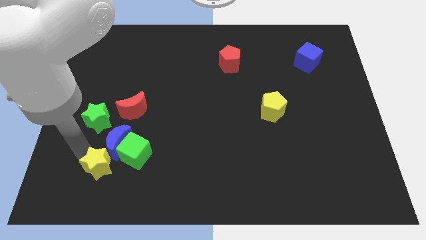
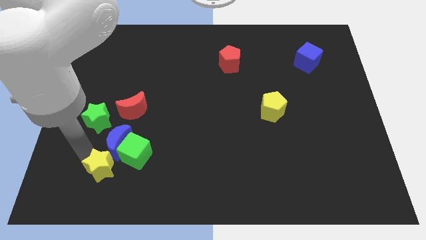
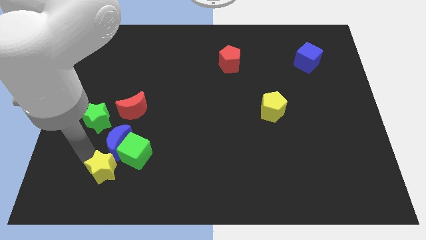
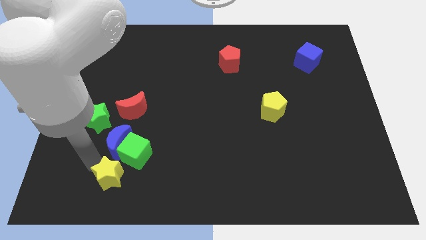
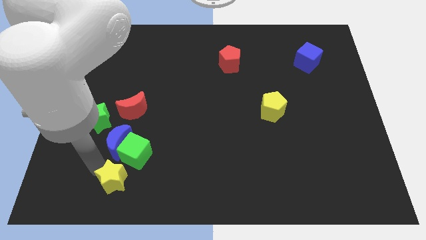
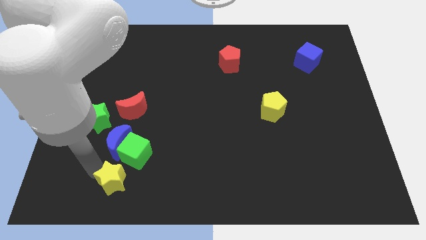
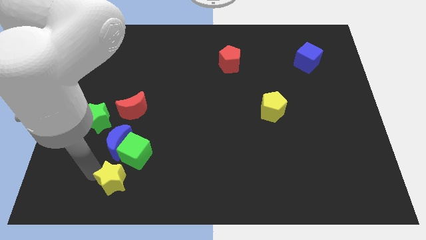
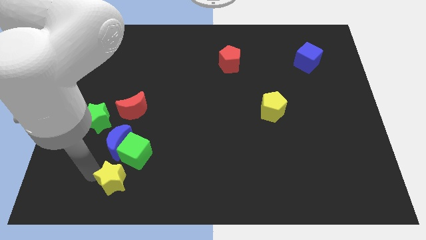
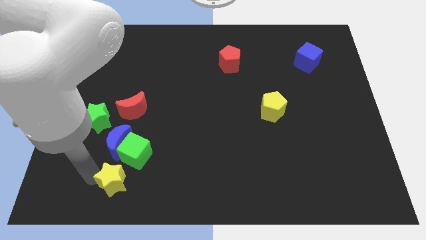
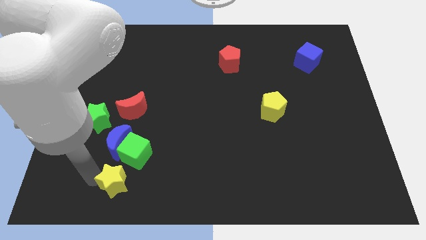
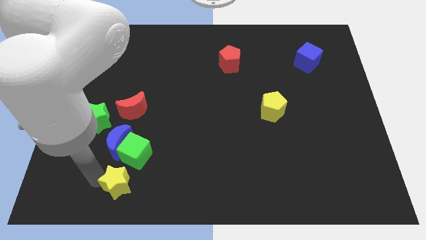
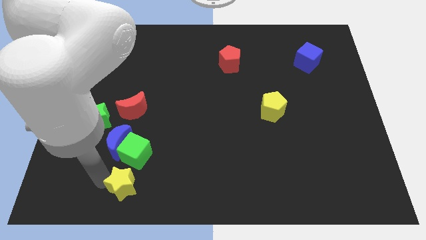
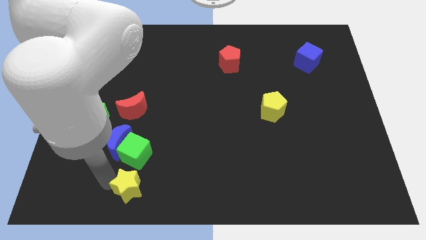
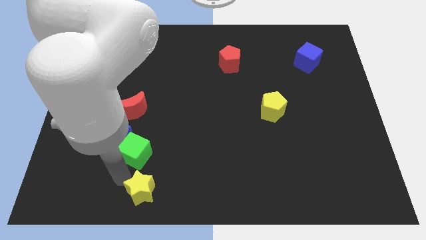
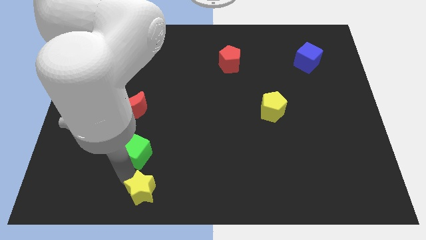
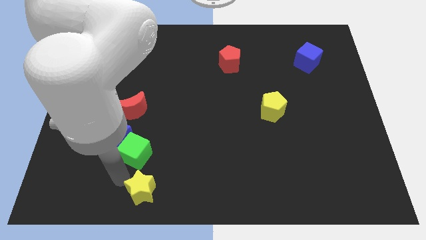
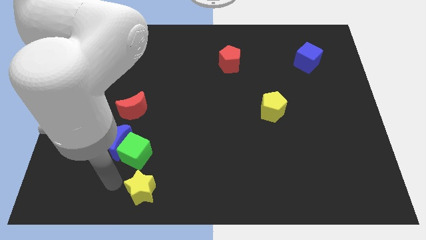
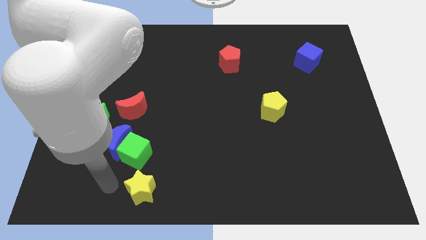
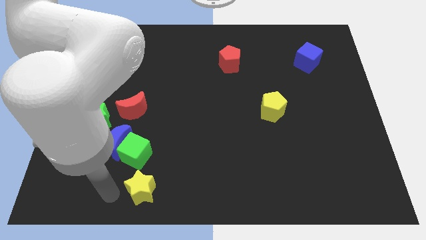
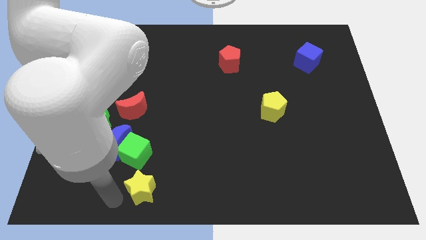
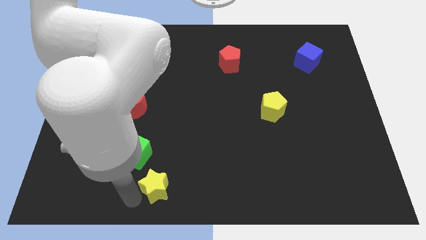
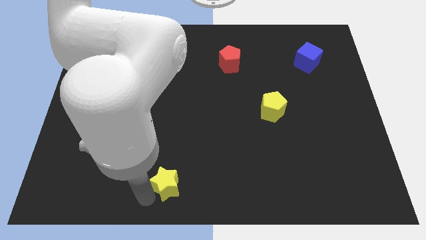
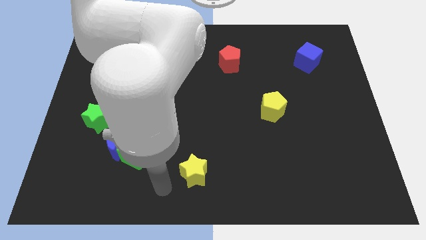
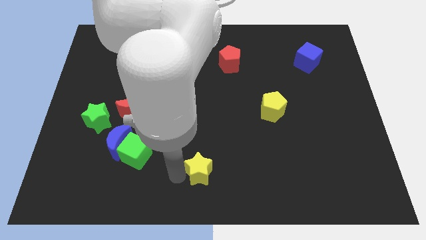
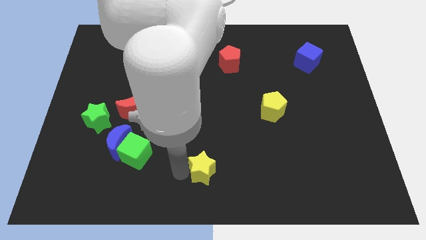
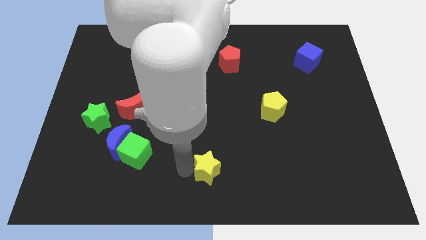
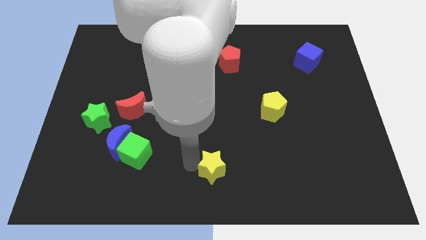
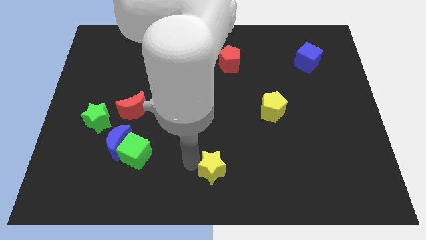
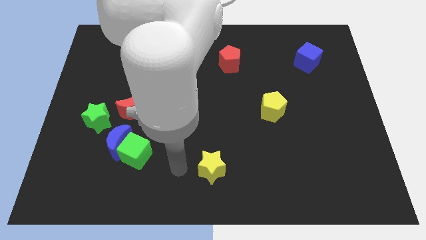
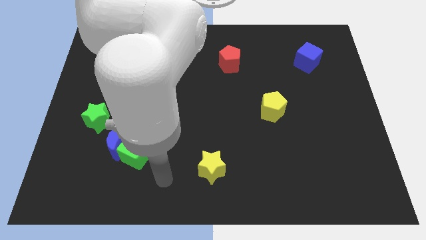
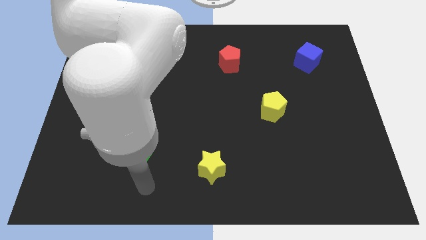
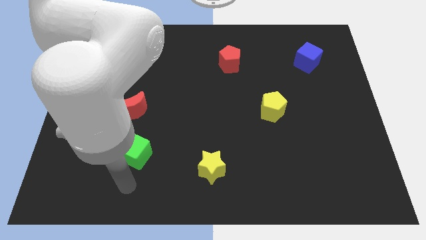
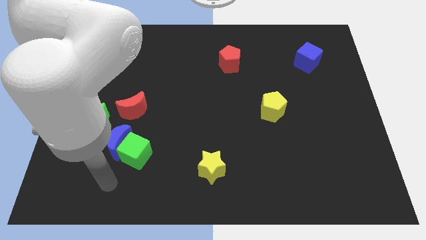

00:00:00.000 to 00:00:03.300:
place the yellow star diagonal to the yellow pentagon

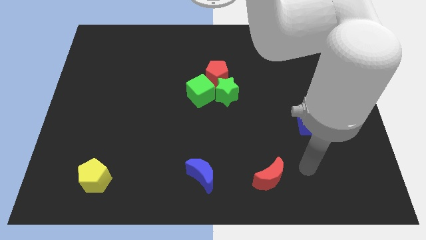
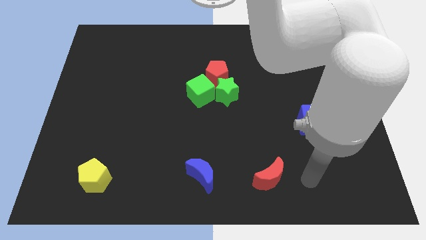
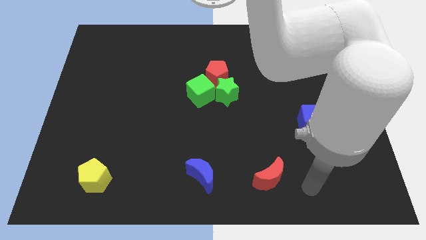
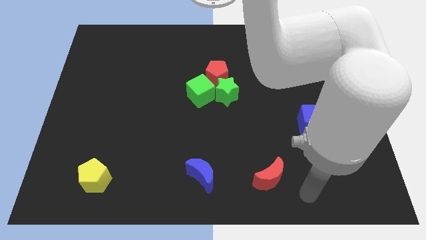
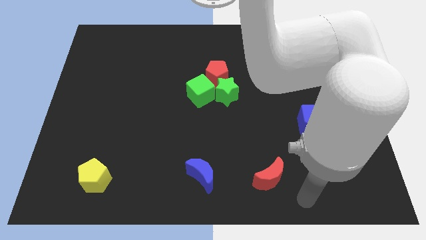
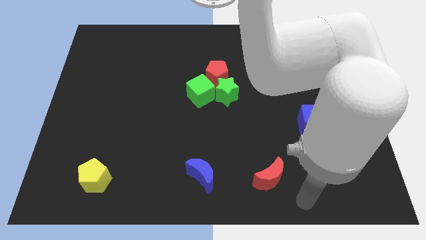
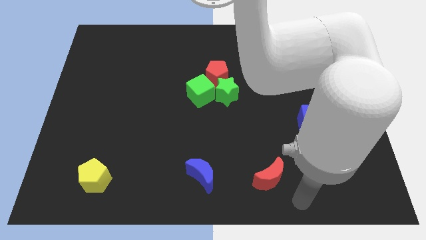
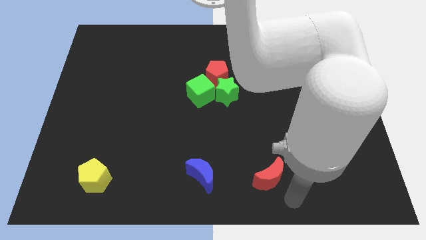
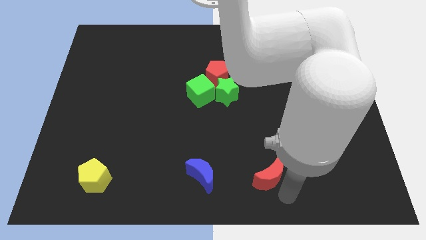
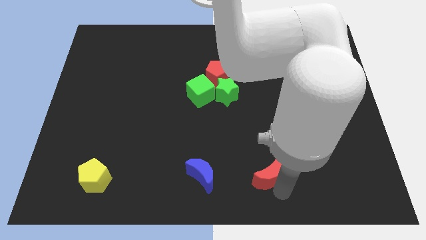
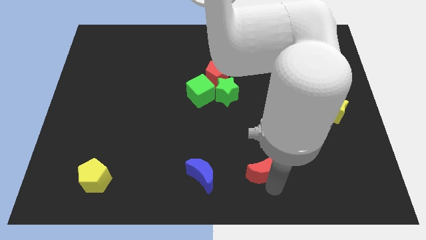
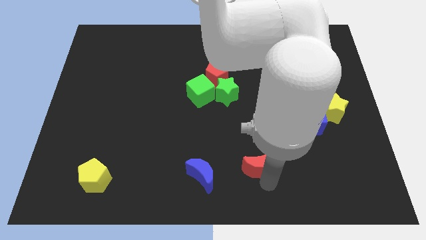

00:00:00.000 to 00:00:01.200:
touch the bottom of red moon

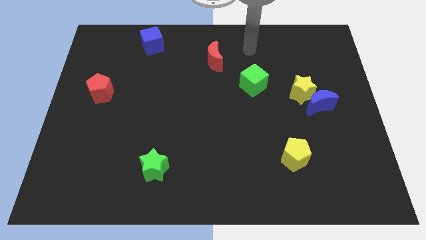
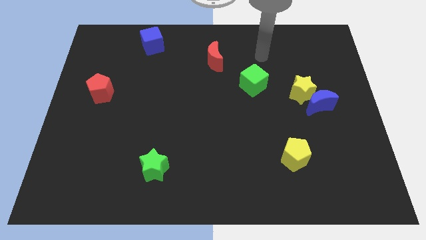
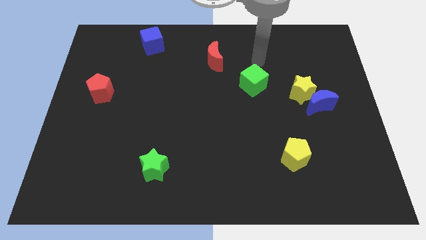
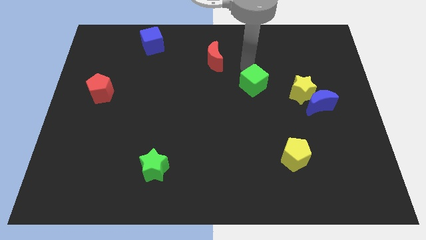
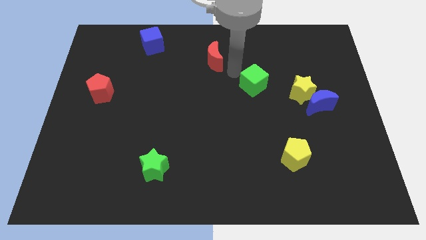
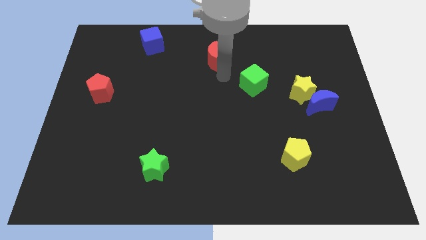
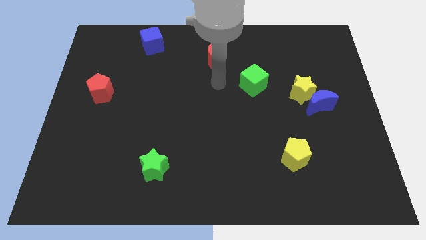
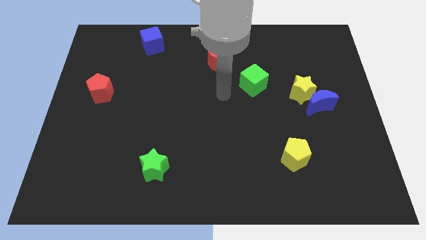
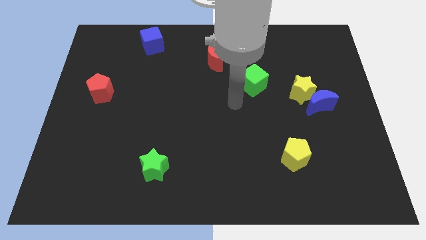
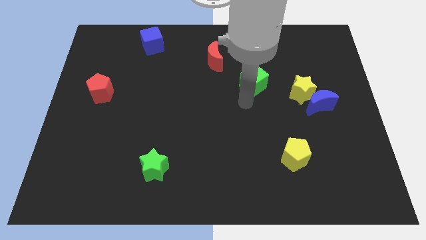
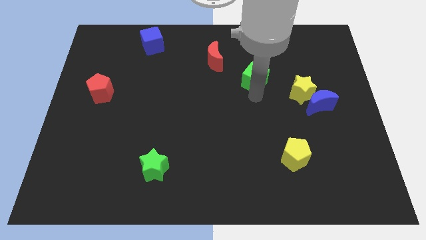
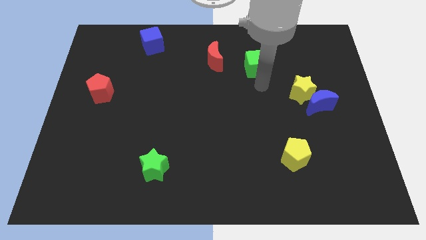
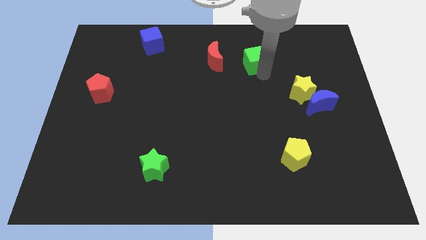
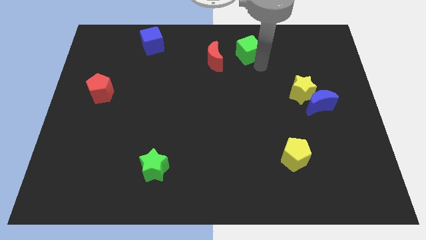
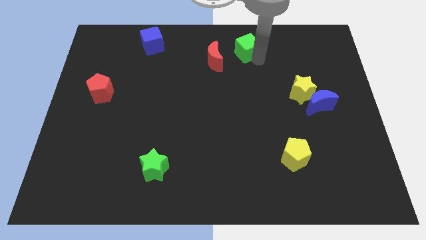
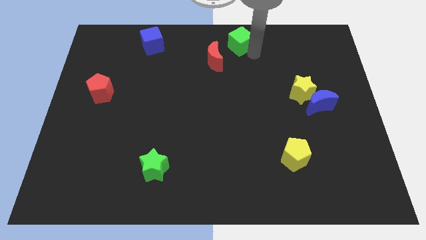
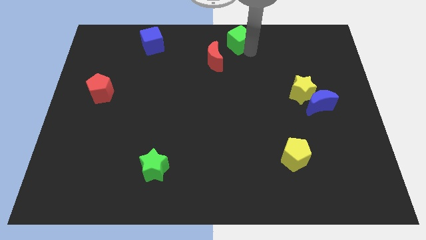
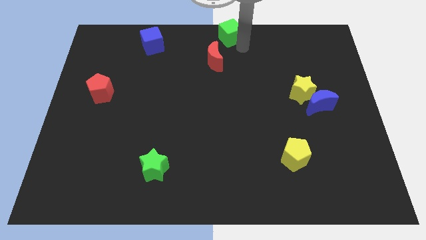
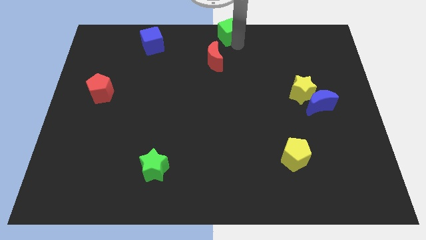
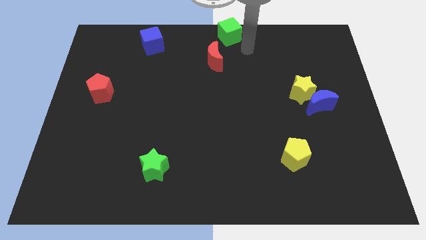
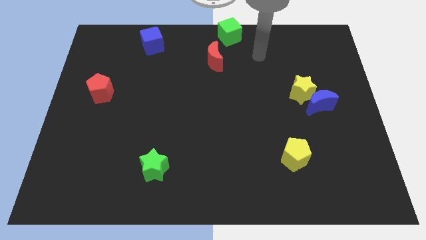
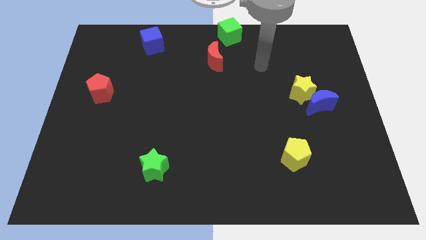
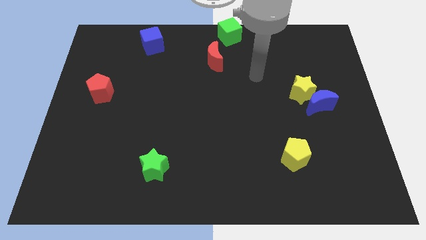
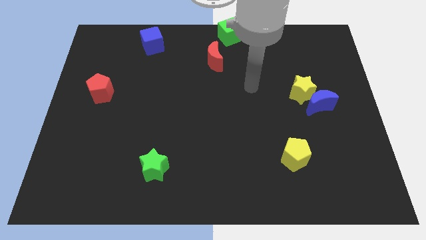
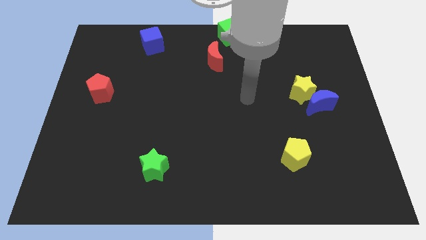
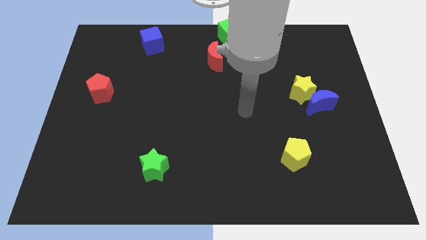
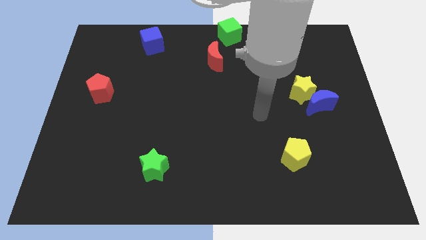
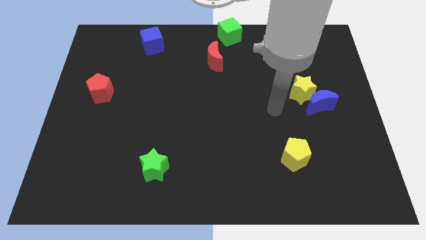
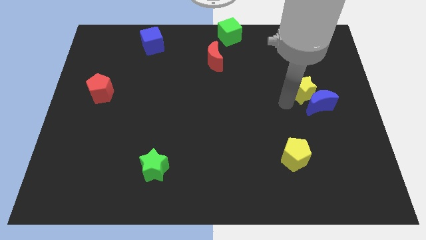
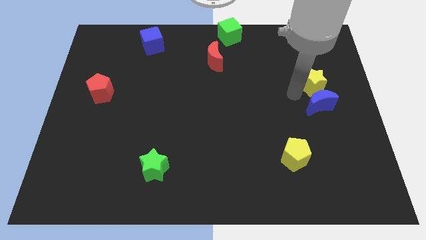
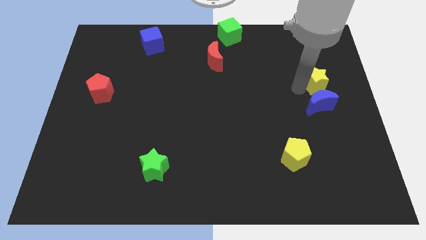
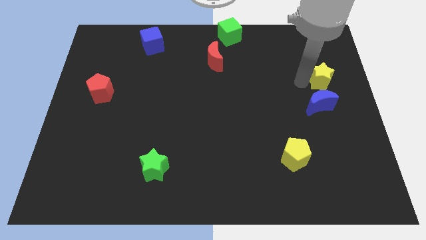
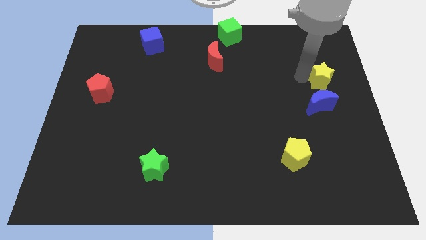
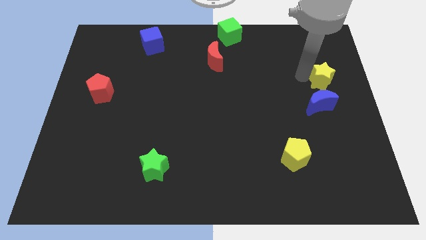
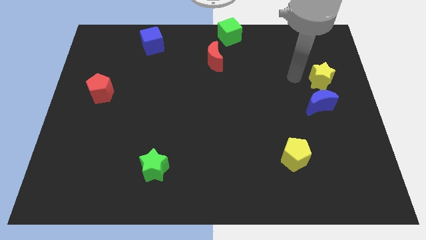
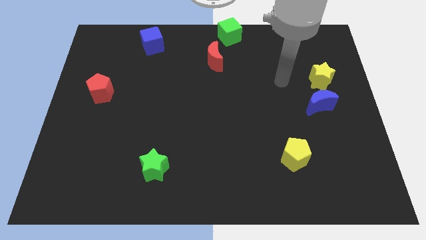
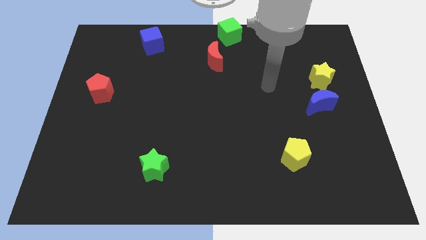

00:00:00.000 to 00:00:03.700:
place the green cube at the top center and yellow star above the blue crescent

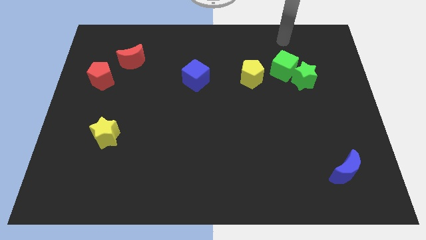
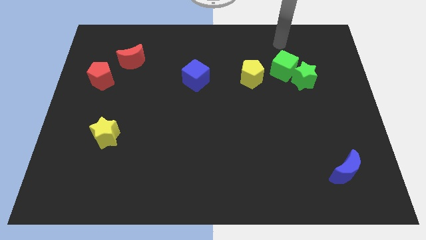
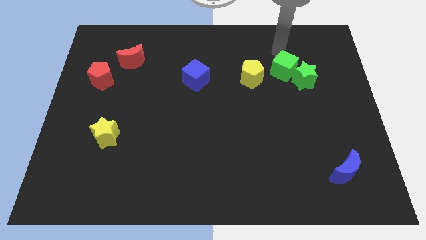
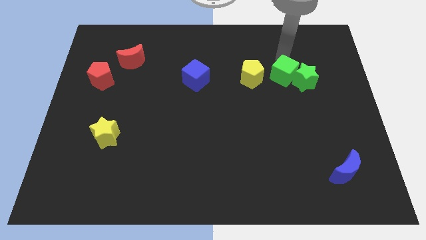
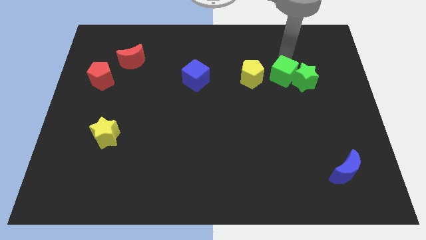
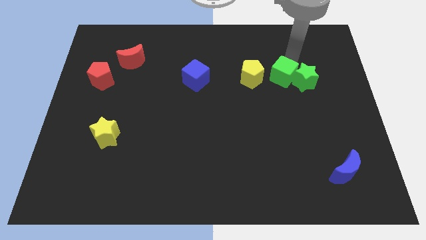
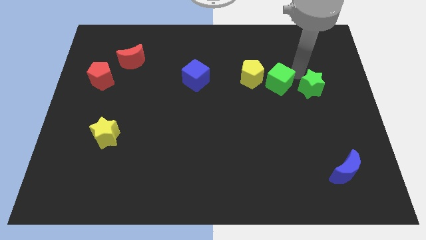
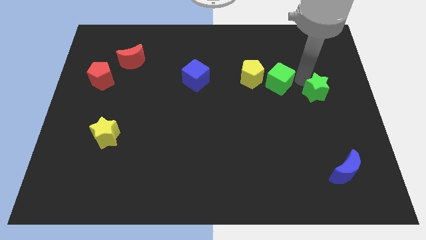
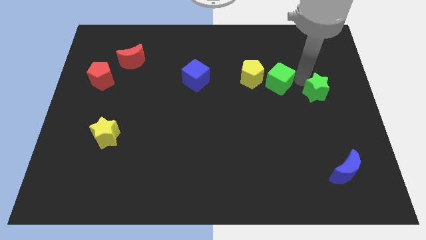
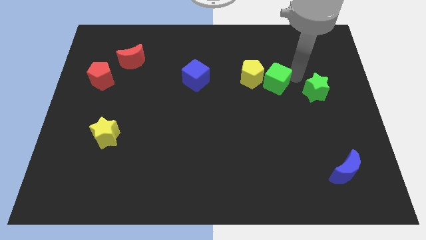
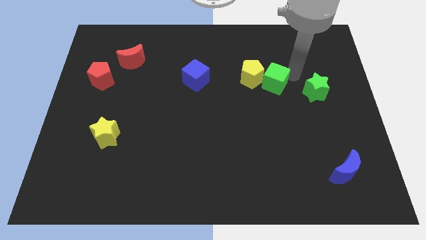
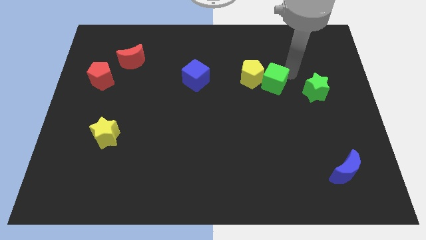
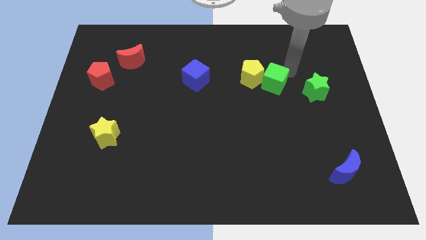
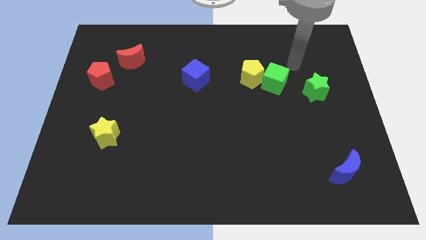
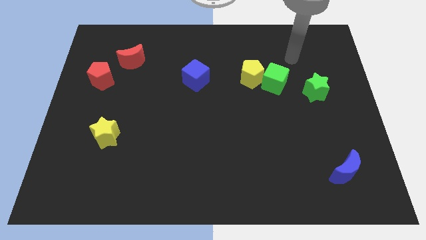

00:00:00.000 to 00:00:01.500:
separate the green star from the green cube
